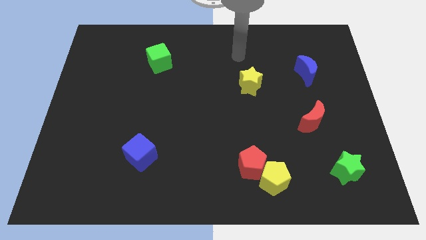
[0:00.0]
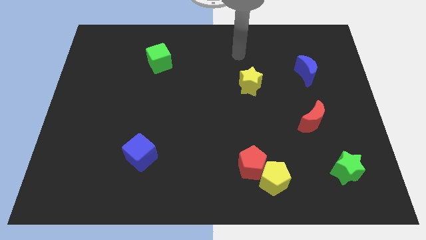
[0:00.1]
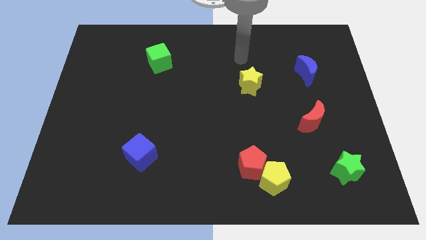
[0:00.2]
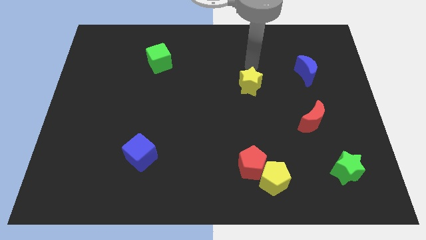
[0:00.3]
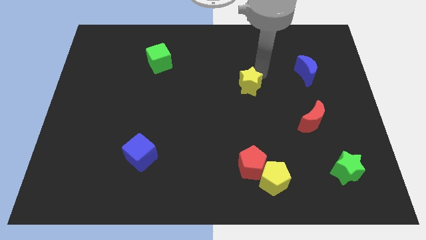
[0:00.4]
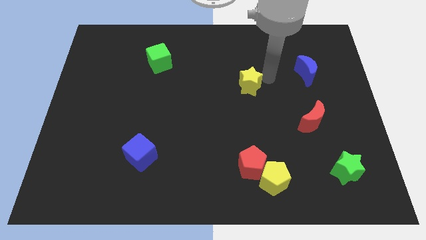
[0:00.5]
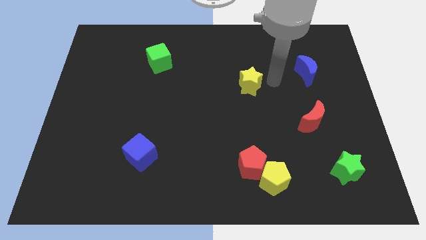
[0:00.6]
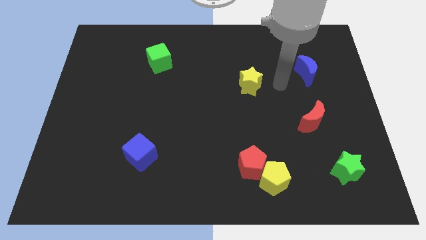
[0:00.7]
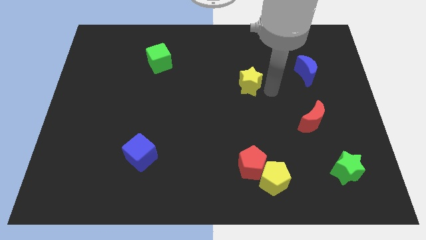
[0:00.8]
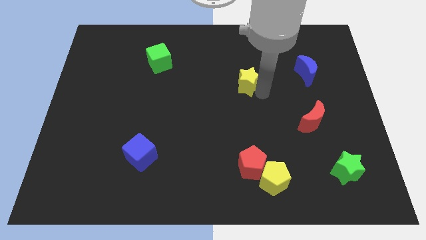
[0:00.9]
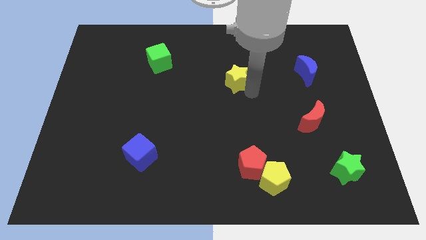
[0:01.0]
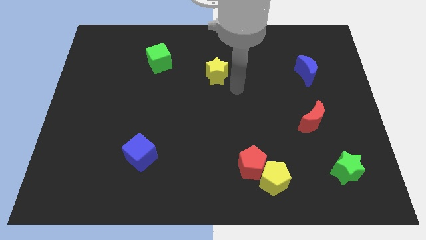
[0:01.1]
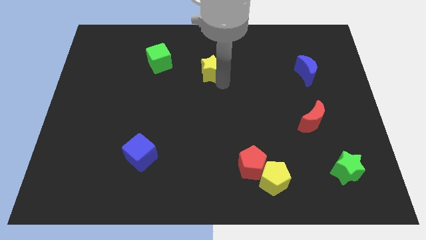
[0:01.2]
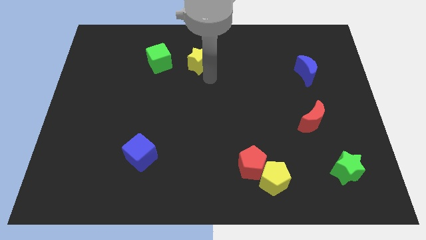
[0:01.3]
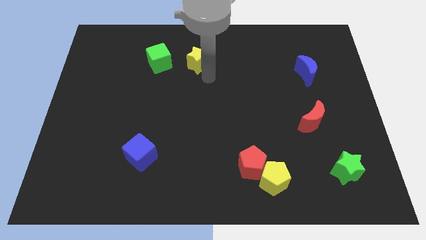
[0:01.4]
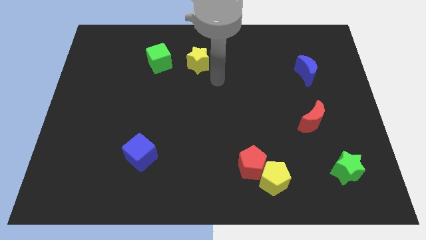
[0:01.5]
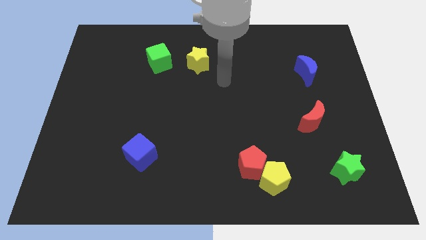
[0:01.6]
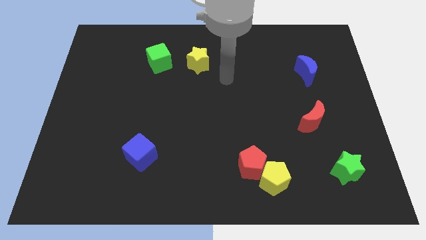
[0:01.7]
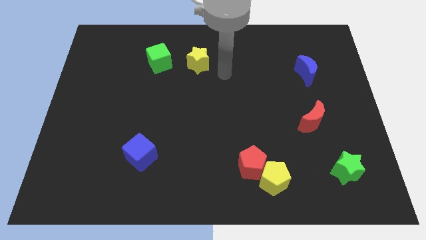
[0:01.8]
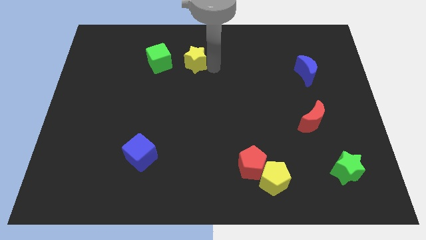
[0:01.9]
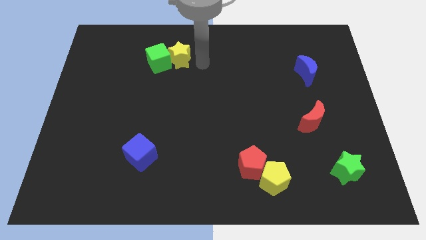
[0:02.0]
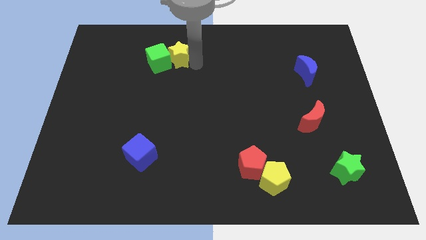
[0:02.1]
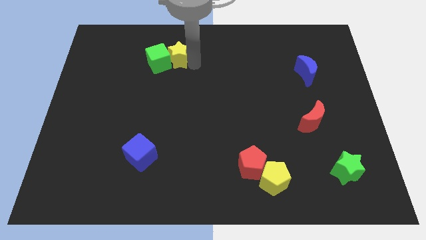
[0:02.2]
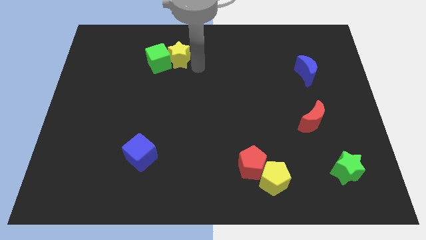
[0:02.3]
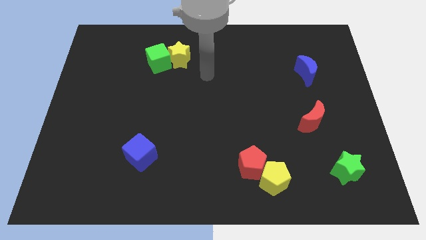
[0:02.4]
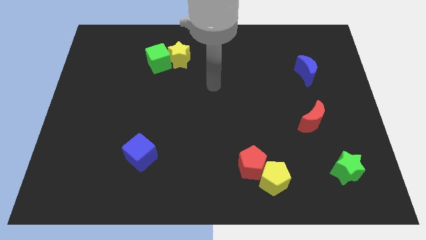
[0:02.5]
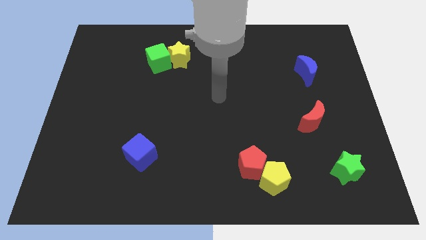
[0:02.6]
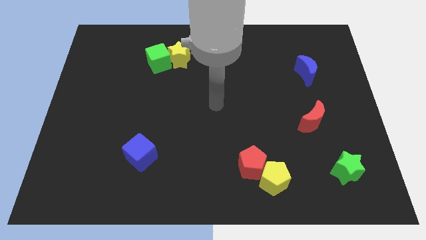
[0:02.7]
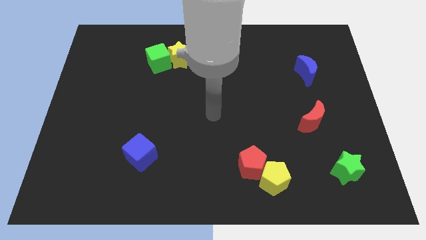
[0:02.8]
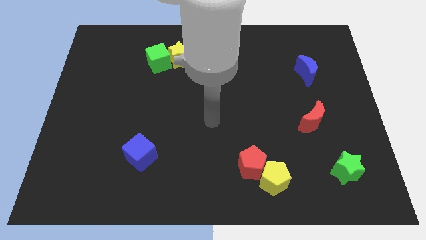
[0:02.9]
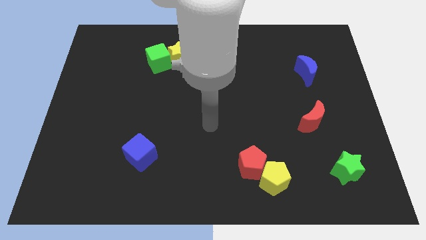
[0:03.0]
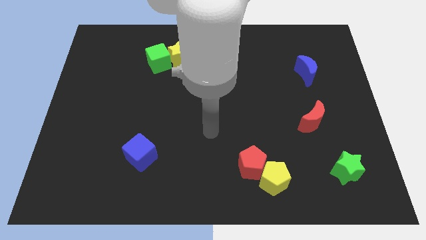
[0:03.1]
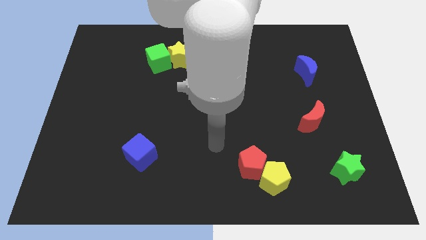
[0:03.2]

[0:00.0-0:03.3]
push the yellow star into the right side of the green cube

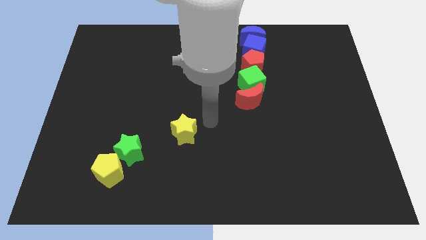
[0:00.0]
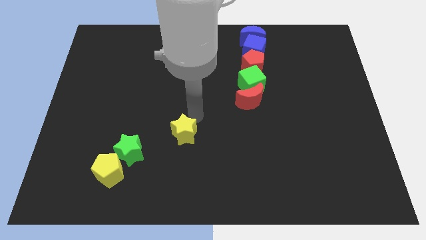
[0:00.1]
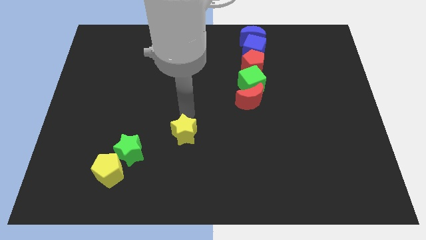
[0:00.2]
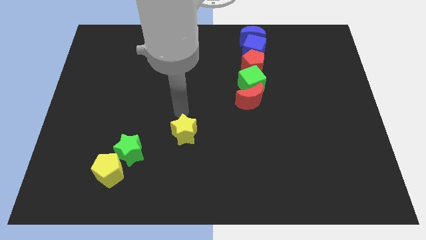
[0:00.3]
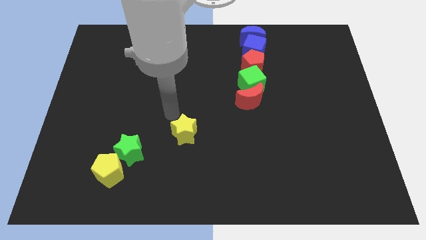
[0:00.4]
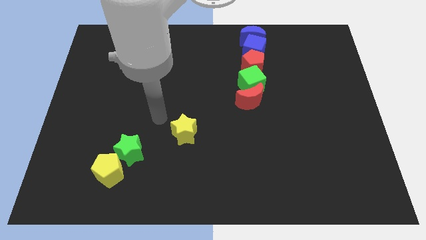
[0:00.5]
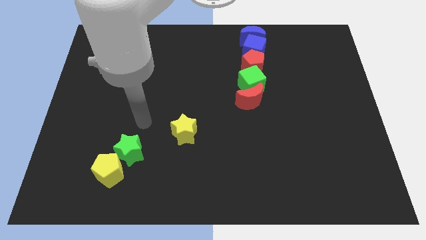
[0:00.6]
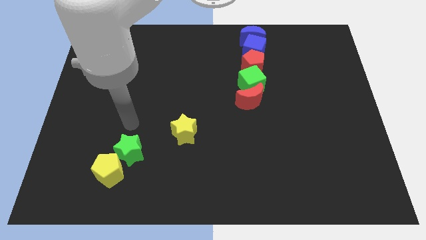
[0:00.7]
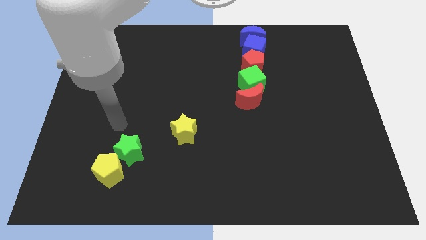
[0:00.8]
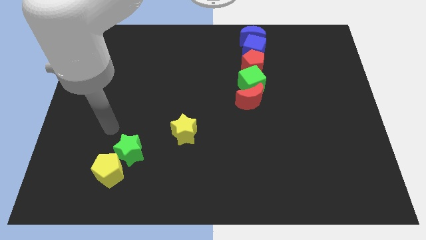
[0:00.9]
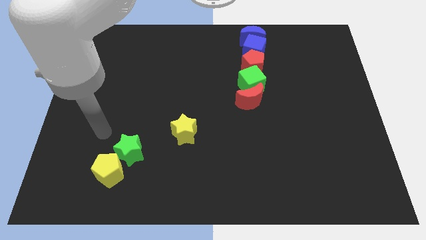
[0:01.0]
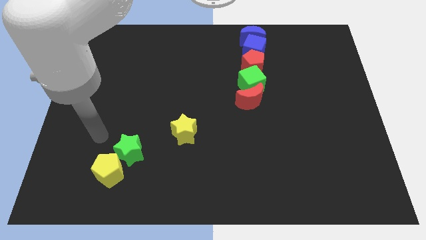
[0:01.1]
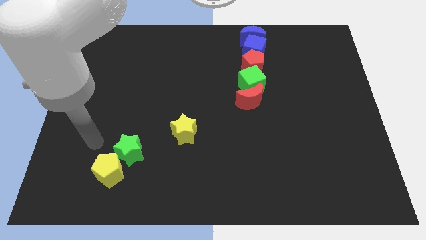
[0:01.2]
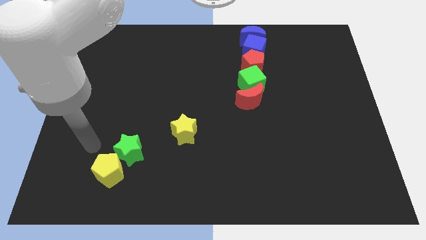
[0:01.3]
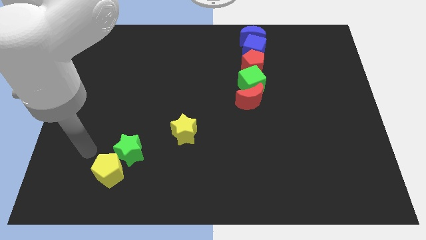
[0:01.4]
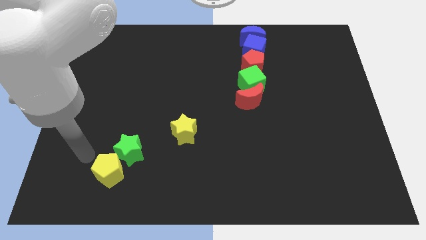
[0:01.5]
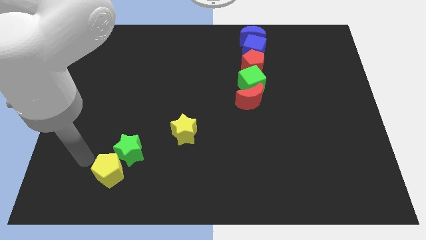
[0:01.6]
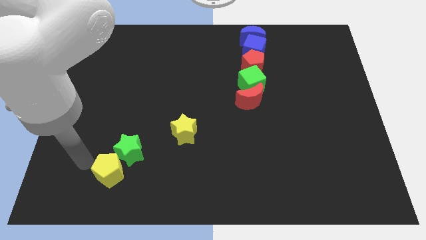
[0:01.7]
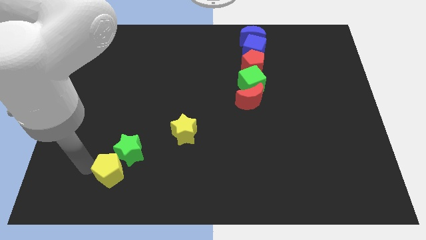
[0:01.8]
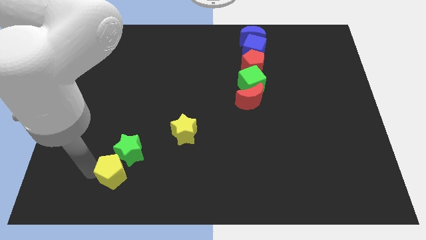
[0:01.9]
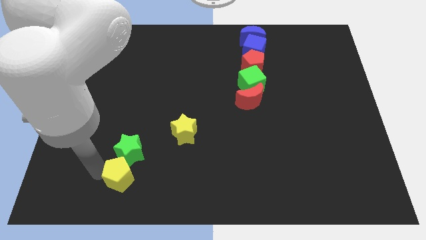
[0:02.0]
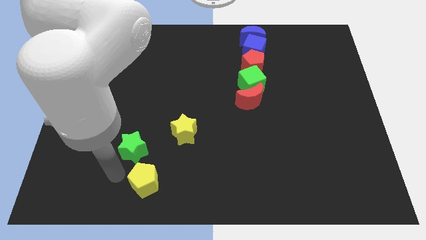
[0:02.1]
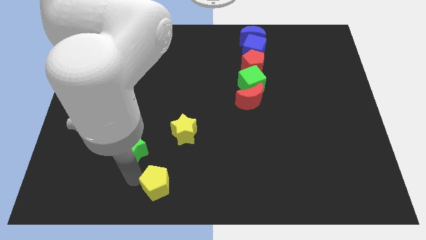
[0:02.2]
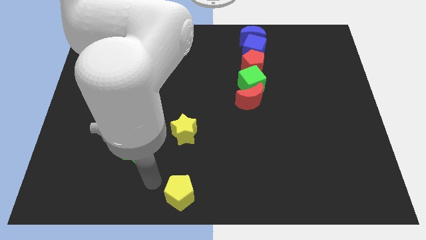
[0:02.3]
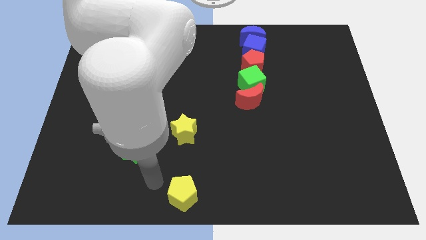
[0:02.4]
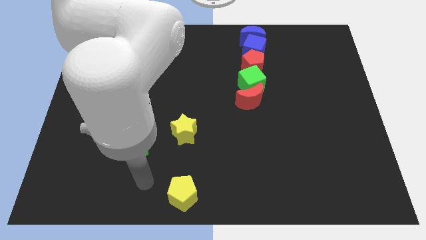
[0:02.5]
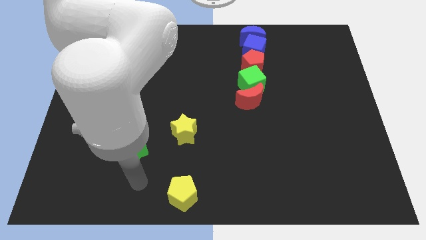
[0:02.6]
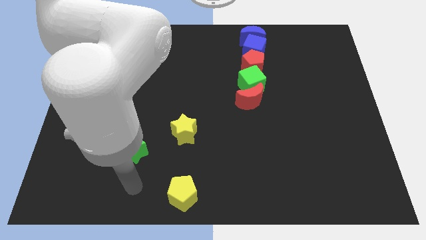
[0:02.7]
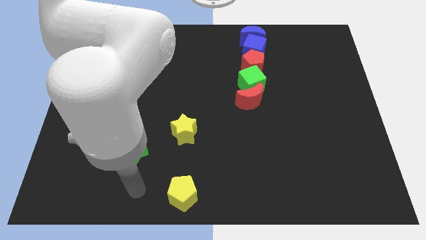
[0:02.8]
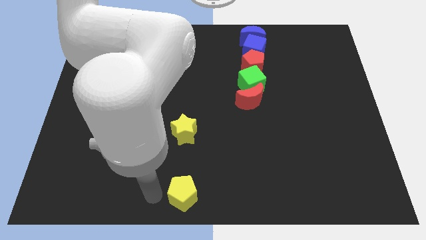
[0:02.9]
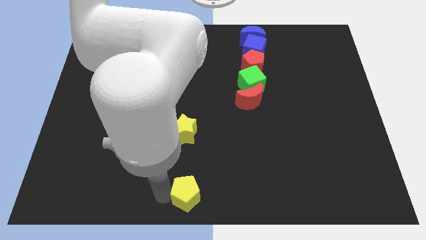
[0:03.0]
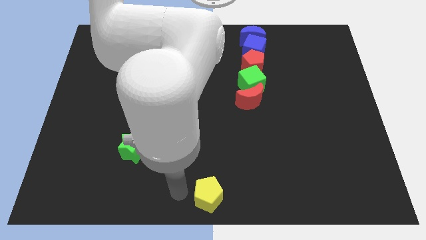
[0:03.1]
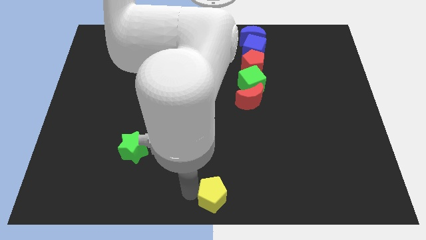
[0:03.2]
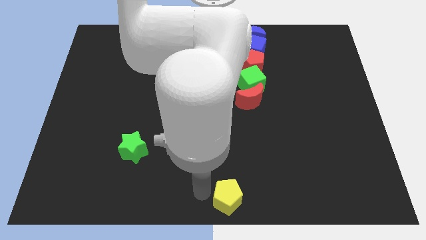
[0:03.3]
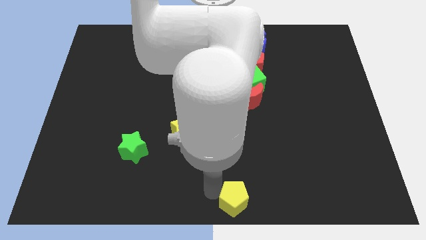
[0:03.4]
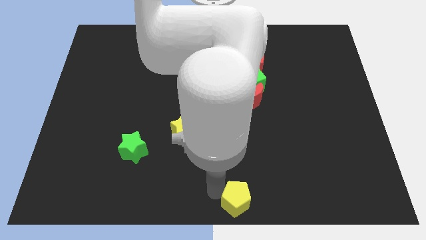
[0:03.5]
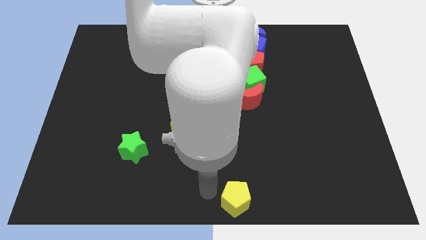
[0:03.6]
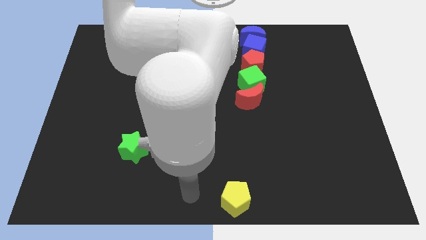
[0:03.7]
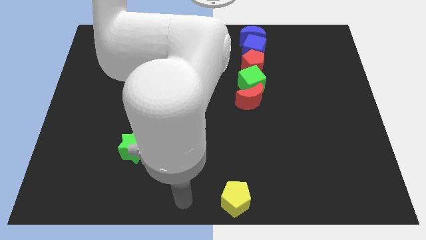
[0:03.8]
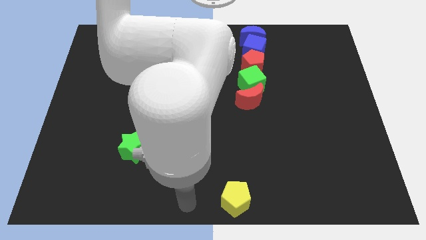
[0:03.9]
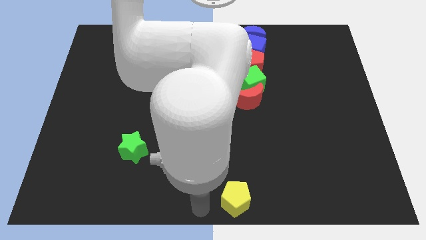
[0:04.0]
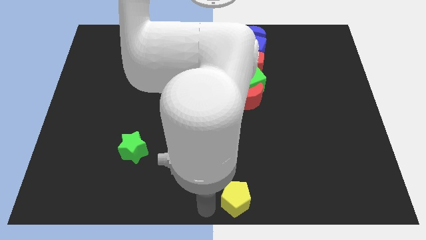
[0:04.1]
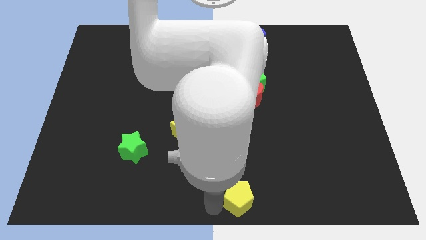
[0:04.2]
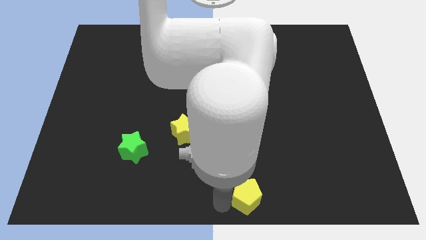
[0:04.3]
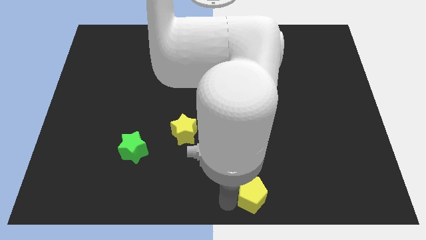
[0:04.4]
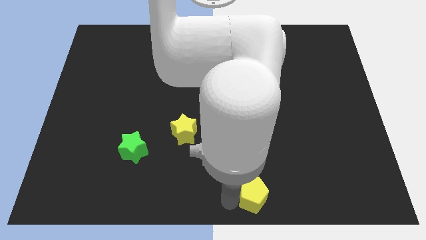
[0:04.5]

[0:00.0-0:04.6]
place the yellow pentagon to bottom center of the board

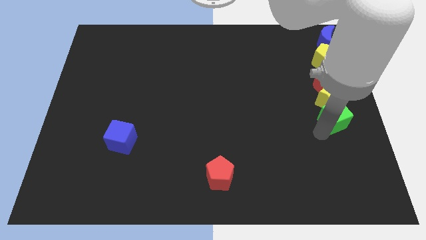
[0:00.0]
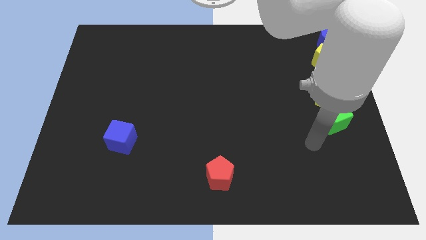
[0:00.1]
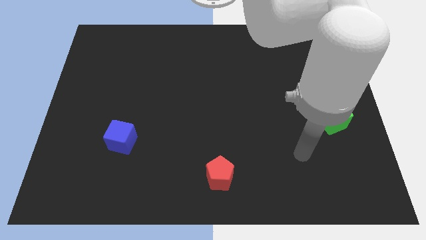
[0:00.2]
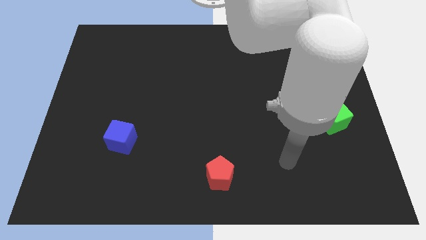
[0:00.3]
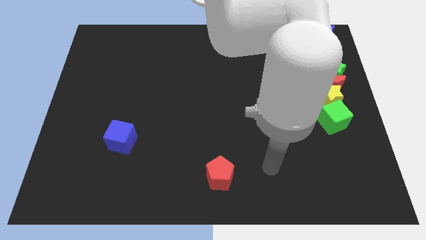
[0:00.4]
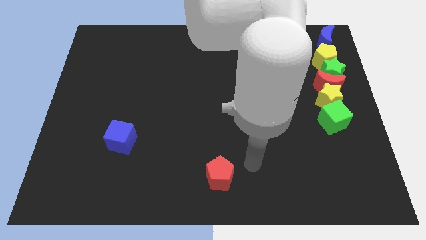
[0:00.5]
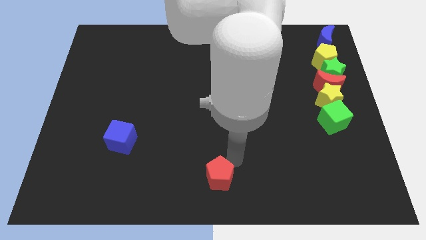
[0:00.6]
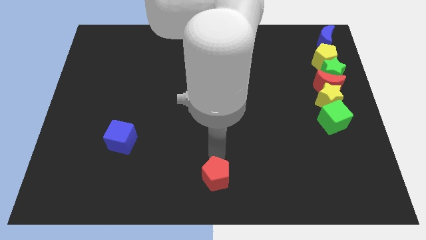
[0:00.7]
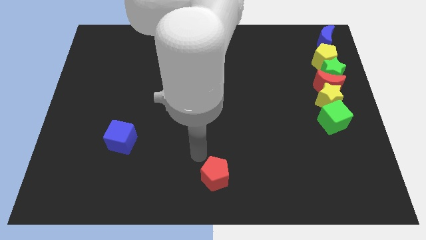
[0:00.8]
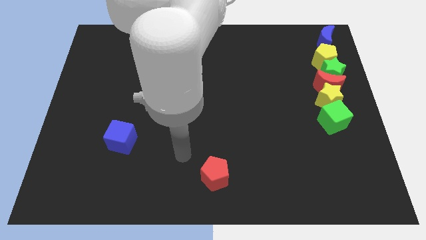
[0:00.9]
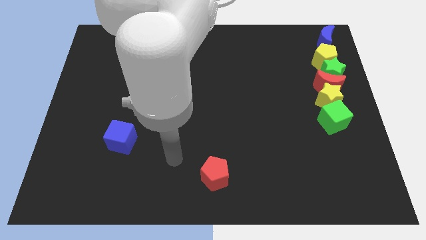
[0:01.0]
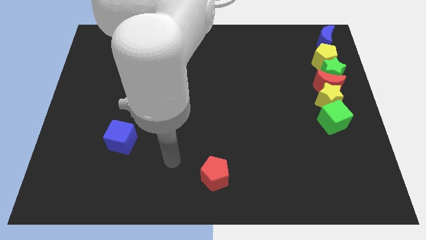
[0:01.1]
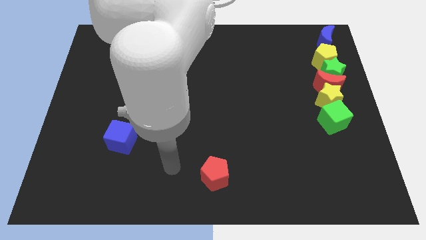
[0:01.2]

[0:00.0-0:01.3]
move away from the green block

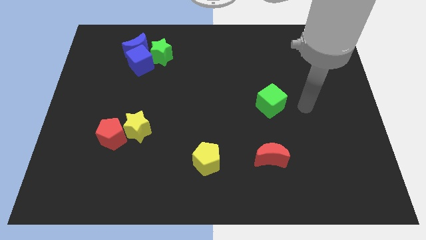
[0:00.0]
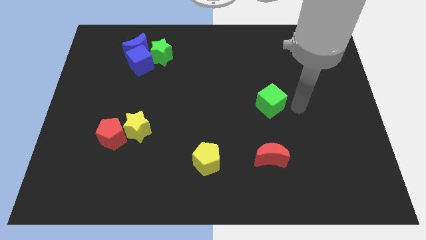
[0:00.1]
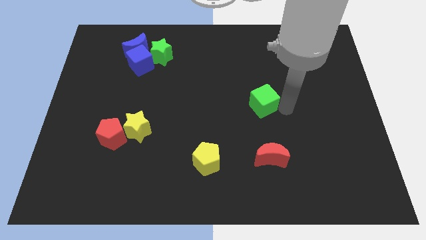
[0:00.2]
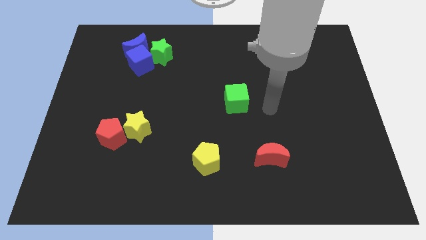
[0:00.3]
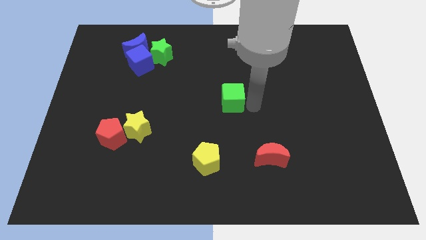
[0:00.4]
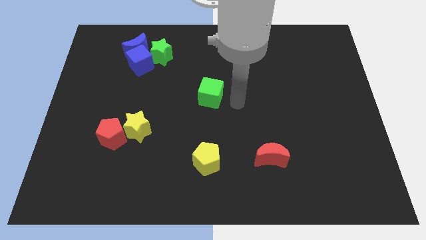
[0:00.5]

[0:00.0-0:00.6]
move the green cube above the yellow pentagon
